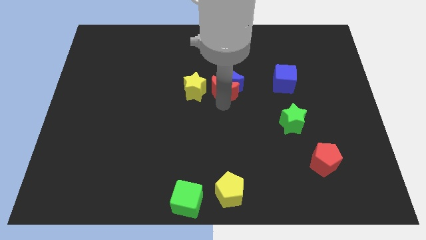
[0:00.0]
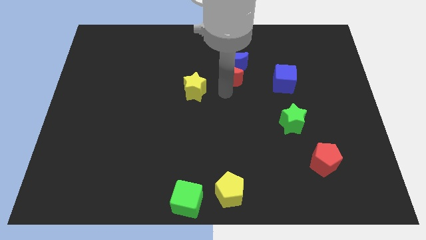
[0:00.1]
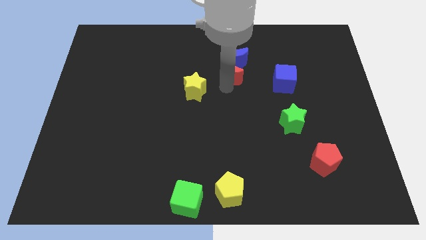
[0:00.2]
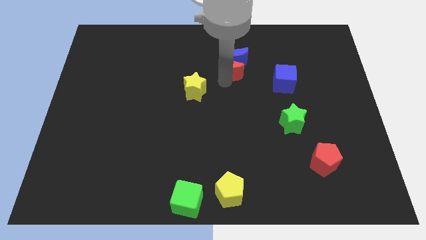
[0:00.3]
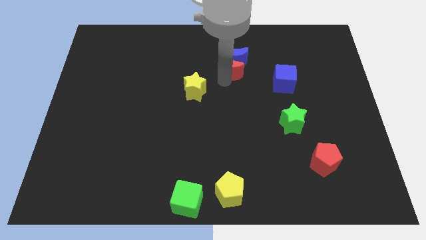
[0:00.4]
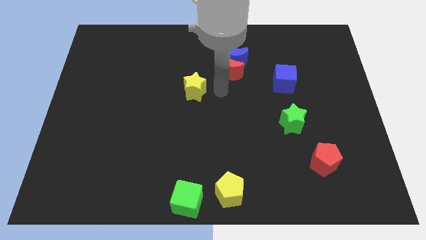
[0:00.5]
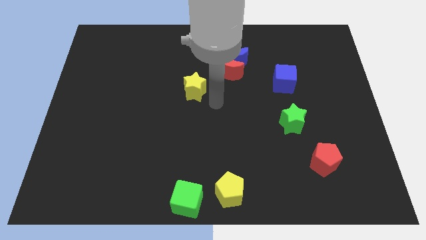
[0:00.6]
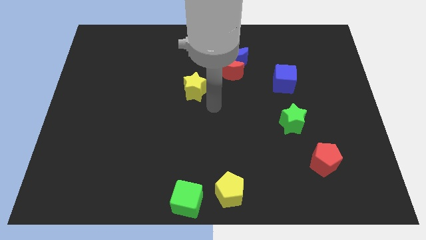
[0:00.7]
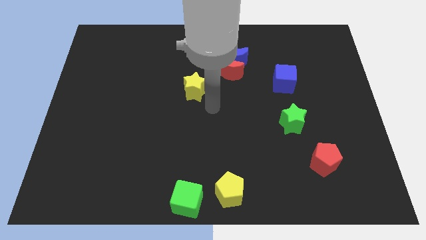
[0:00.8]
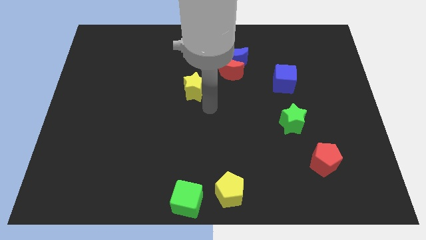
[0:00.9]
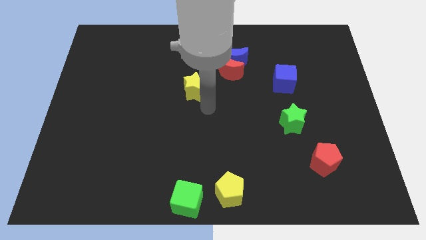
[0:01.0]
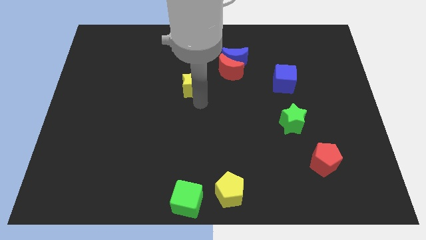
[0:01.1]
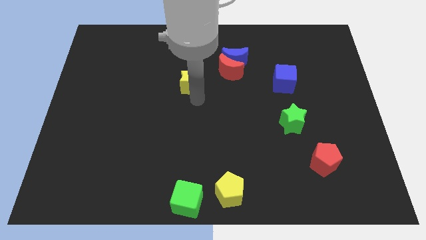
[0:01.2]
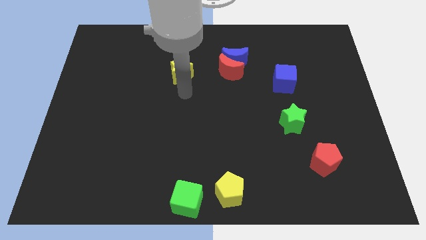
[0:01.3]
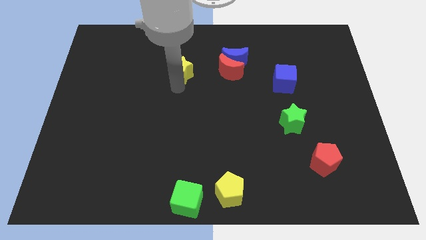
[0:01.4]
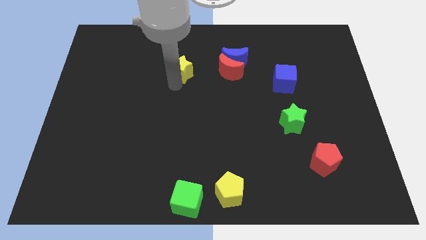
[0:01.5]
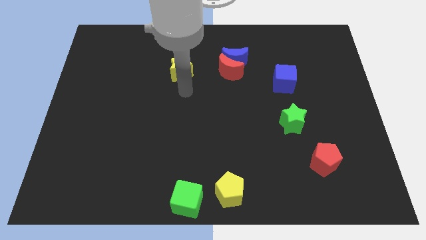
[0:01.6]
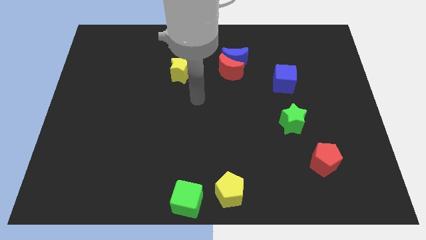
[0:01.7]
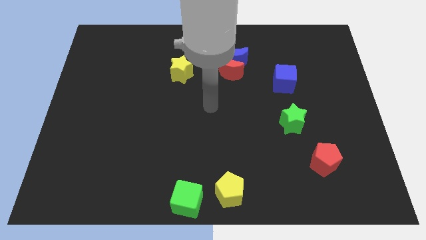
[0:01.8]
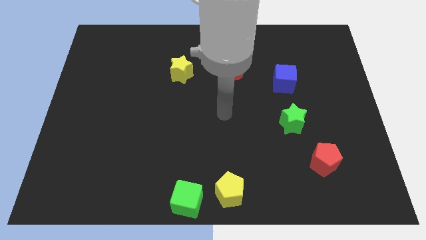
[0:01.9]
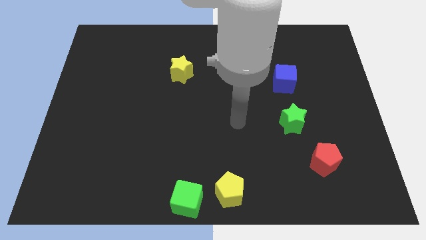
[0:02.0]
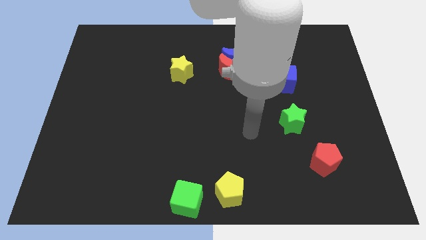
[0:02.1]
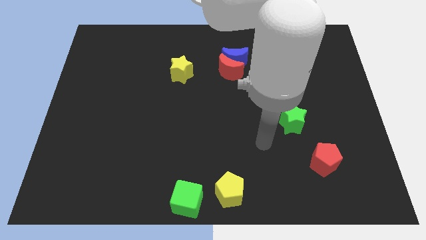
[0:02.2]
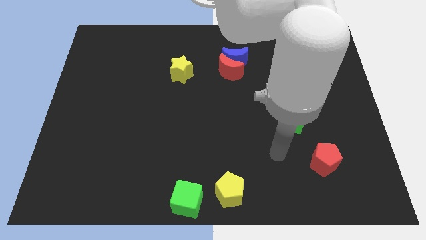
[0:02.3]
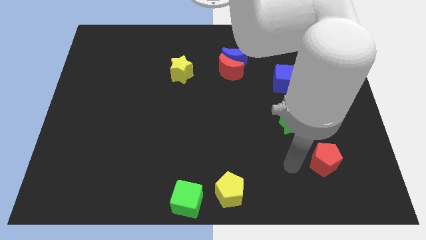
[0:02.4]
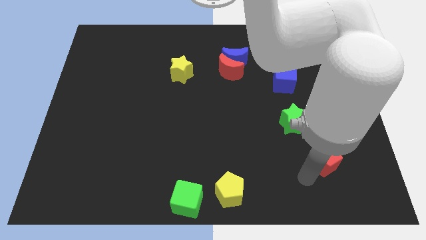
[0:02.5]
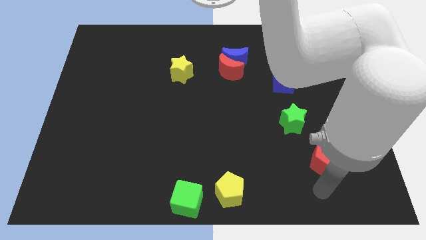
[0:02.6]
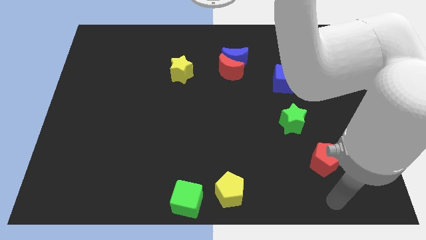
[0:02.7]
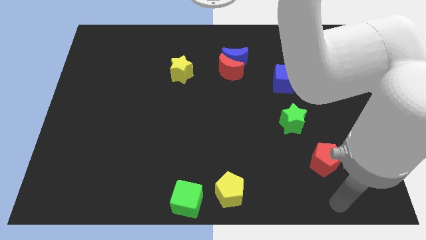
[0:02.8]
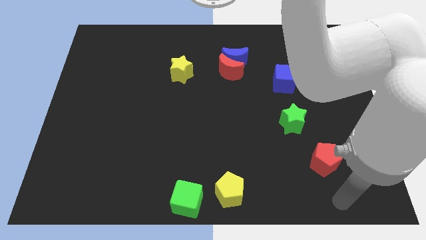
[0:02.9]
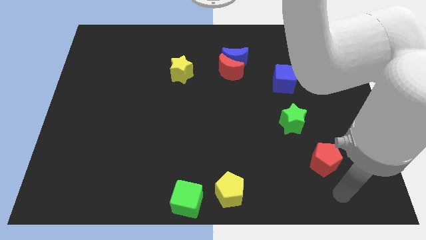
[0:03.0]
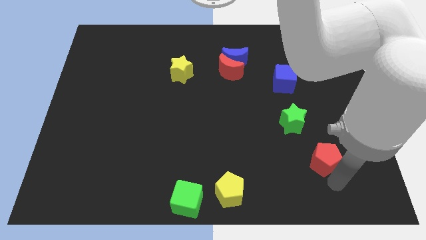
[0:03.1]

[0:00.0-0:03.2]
place the yellow star left to the red moon

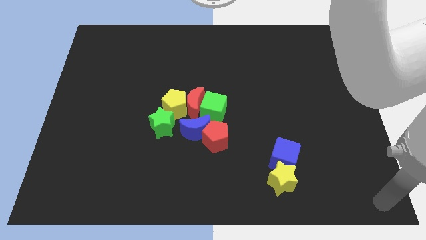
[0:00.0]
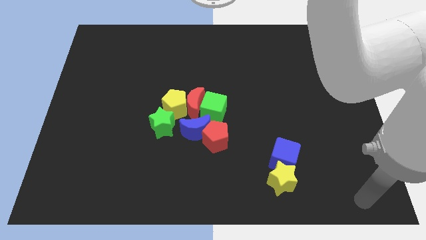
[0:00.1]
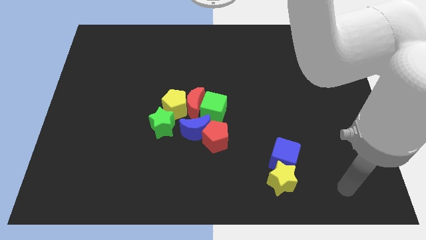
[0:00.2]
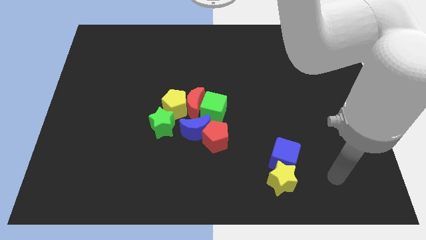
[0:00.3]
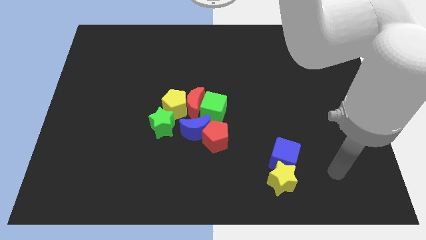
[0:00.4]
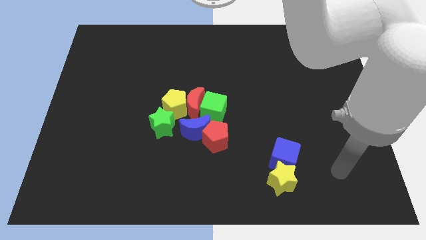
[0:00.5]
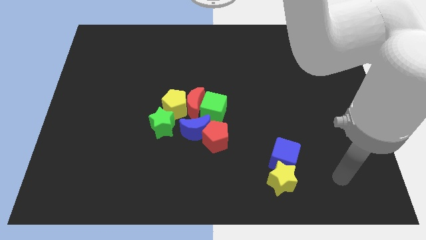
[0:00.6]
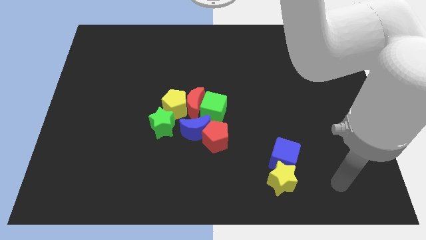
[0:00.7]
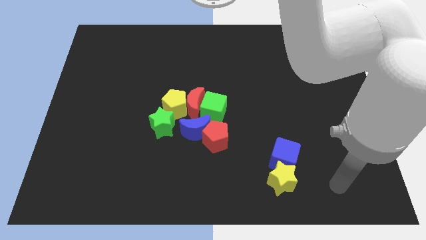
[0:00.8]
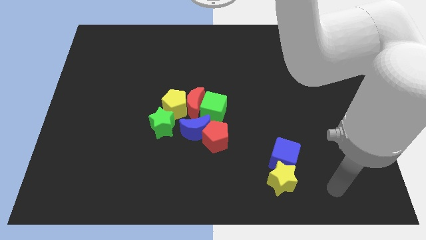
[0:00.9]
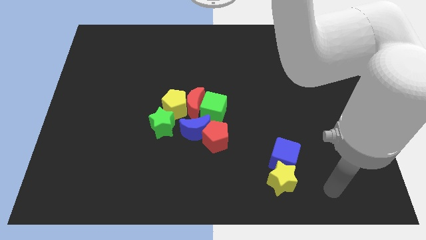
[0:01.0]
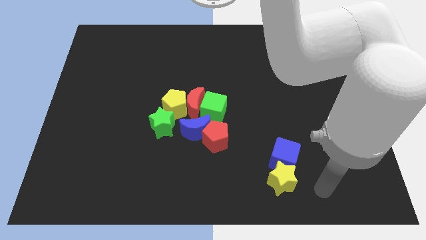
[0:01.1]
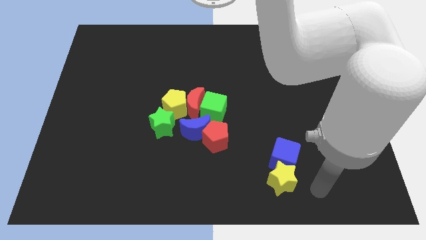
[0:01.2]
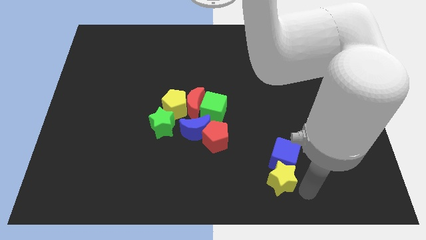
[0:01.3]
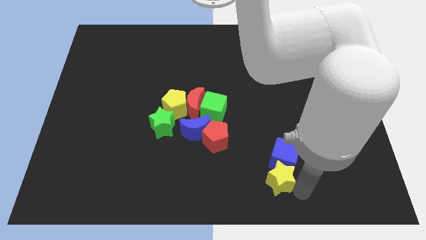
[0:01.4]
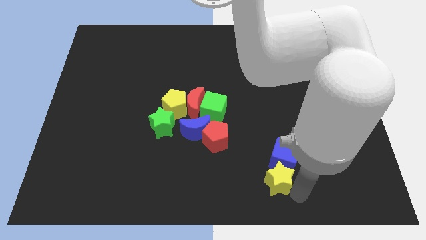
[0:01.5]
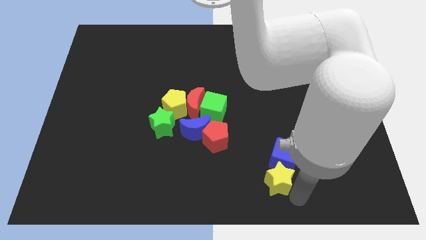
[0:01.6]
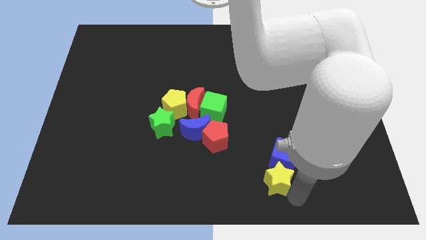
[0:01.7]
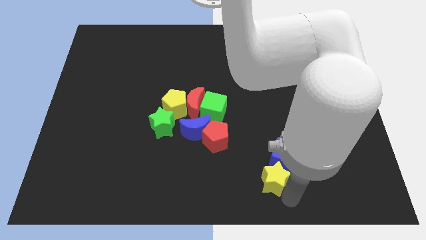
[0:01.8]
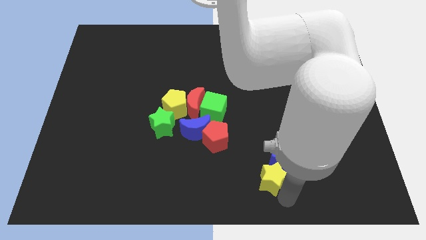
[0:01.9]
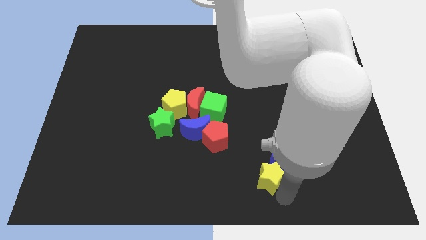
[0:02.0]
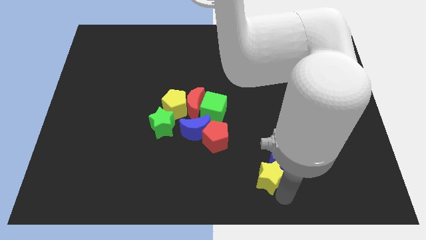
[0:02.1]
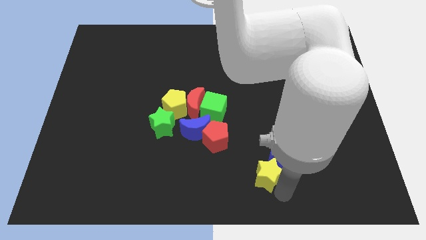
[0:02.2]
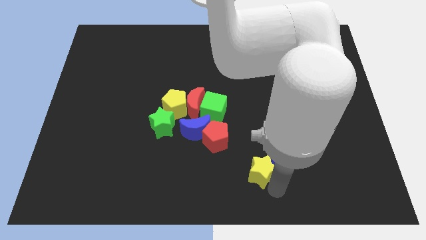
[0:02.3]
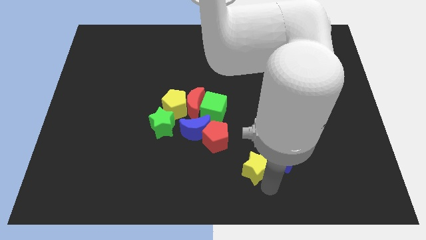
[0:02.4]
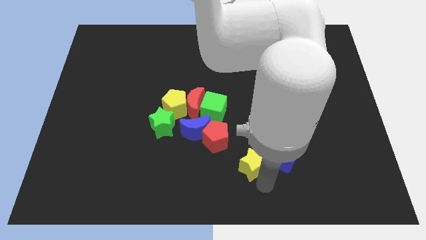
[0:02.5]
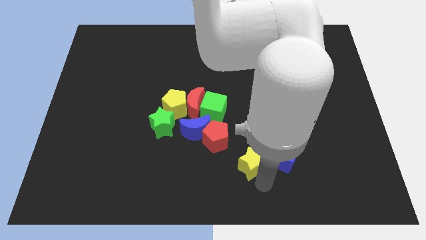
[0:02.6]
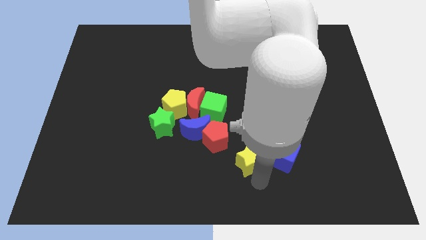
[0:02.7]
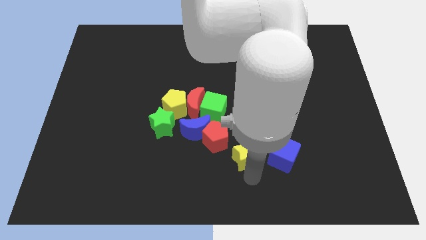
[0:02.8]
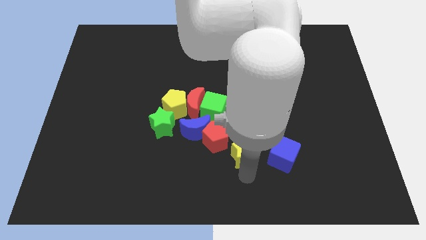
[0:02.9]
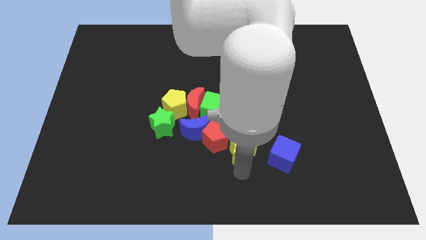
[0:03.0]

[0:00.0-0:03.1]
separate yellow star from blue cube

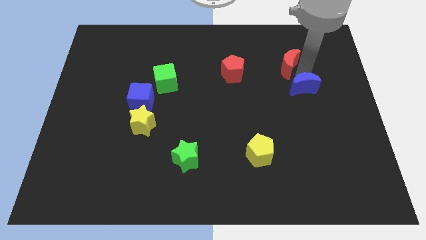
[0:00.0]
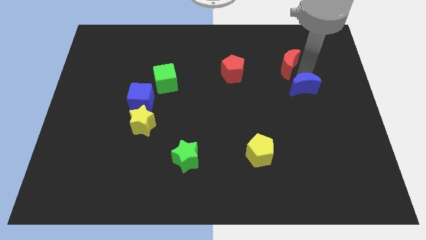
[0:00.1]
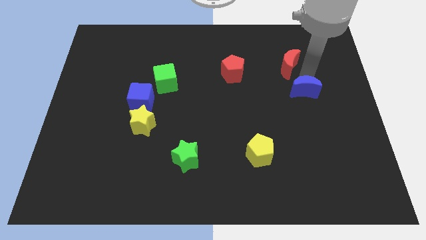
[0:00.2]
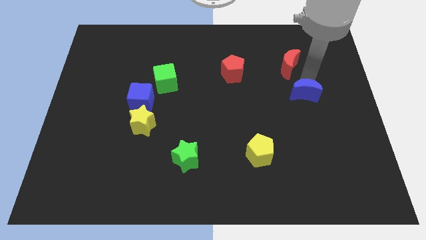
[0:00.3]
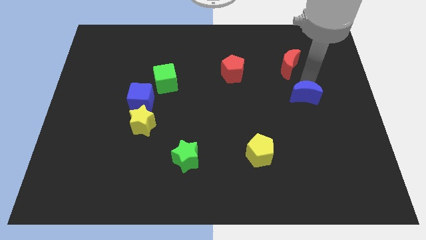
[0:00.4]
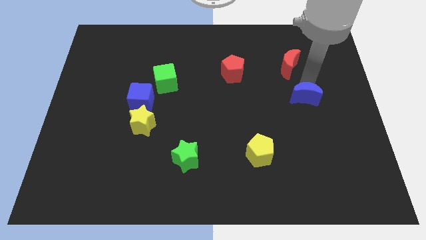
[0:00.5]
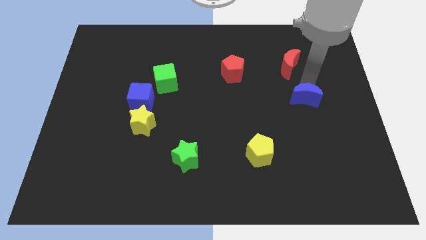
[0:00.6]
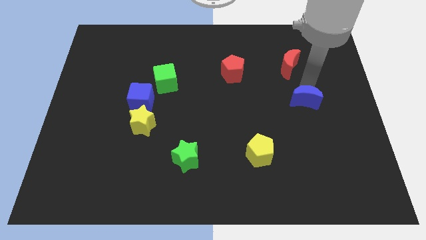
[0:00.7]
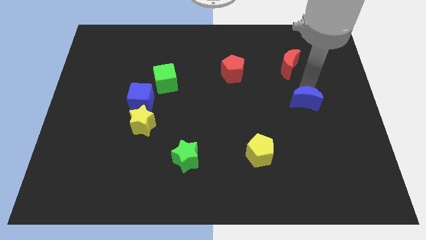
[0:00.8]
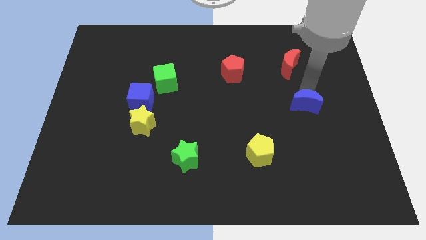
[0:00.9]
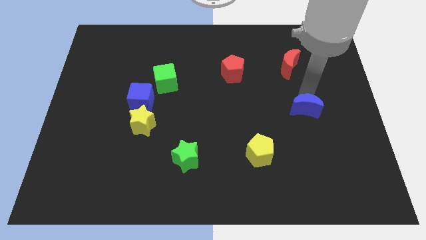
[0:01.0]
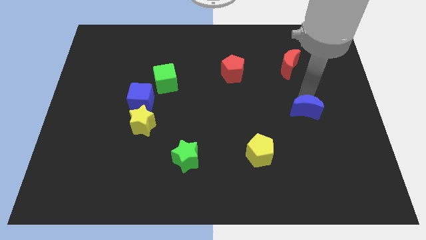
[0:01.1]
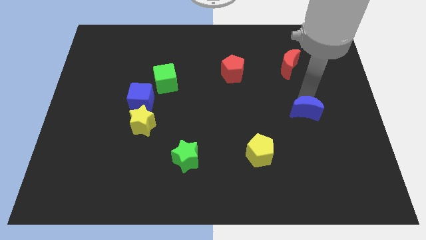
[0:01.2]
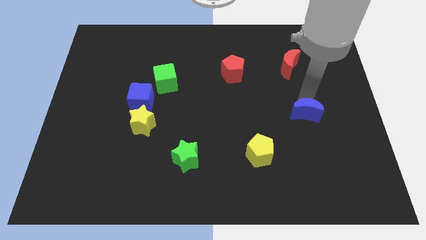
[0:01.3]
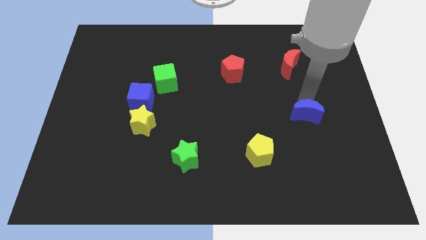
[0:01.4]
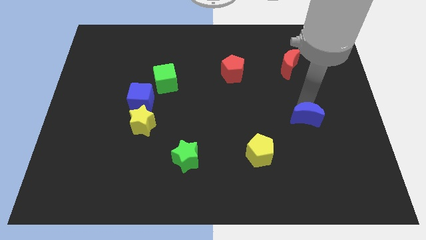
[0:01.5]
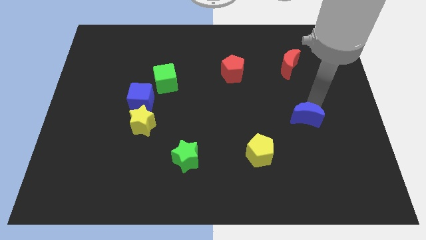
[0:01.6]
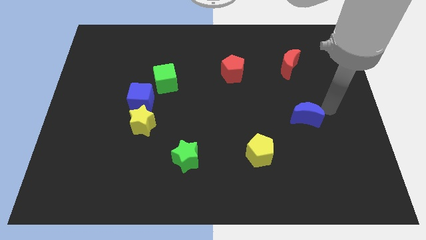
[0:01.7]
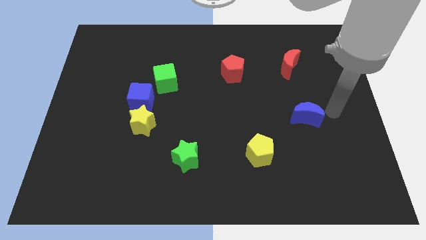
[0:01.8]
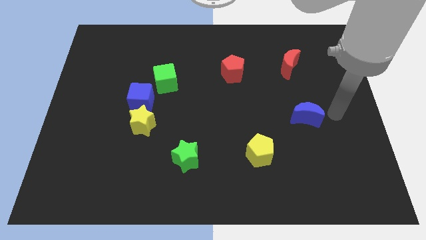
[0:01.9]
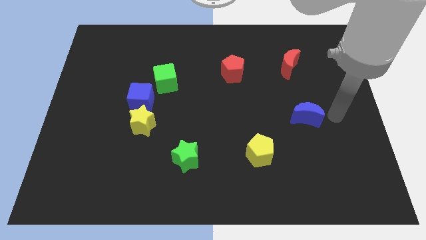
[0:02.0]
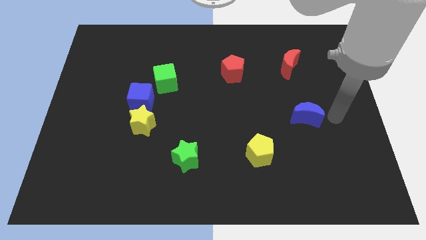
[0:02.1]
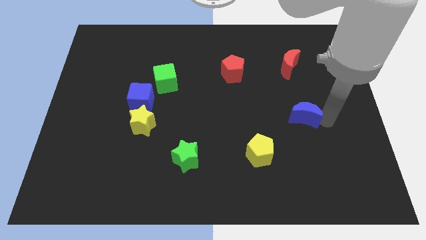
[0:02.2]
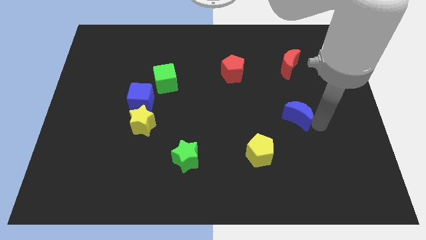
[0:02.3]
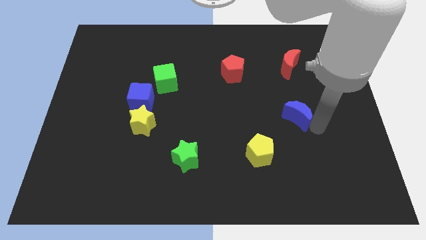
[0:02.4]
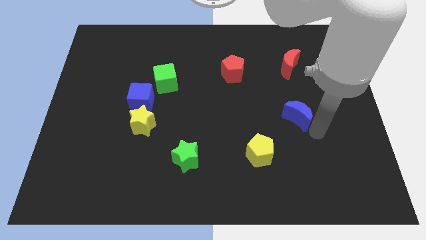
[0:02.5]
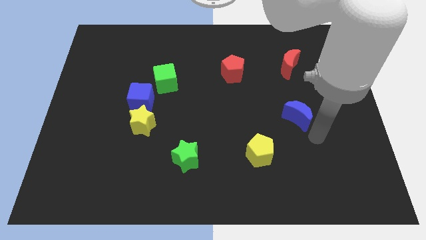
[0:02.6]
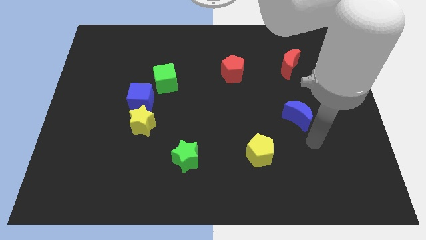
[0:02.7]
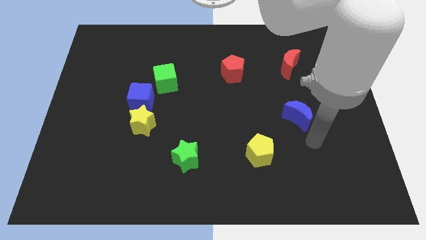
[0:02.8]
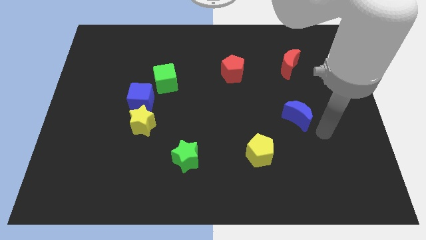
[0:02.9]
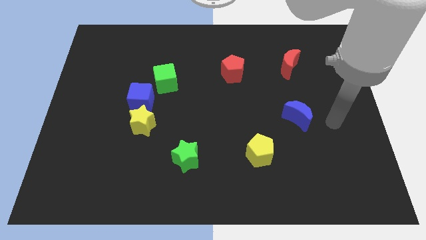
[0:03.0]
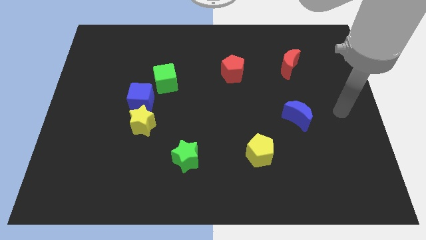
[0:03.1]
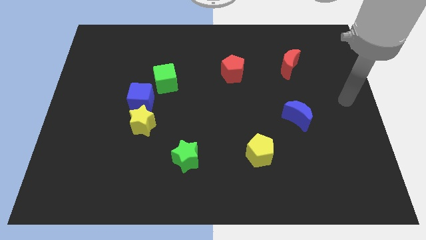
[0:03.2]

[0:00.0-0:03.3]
place blue cube parallel to yellow star
